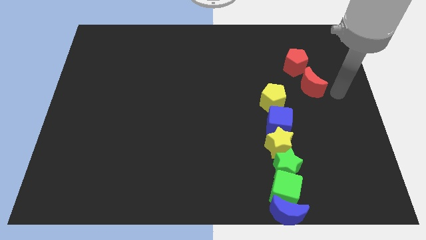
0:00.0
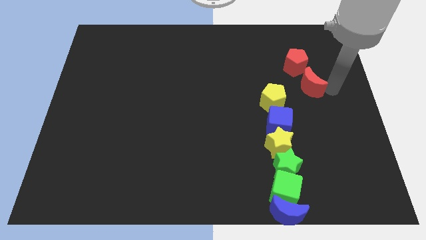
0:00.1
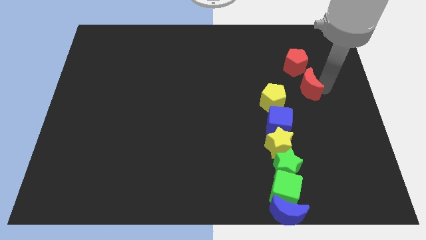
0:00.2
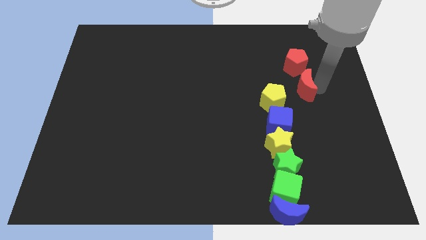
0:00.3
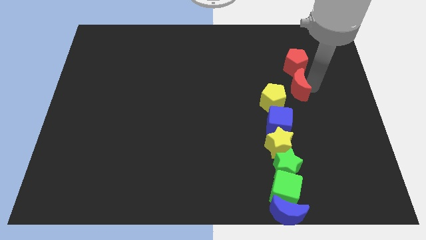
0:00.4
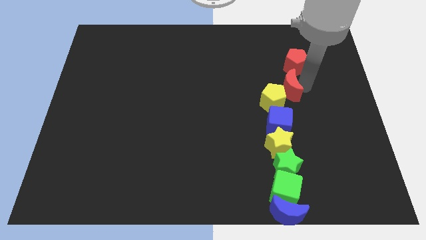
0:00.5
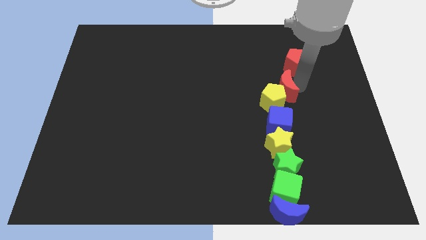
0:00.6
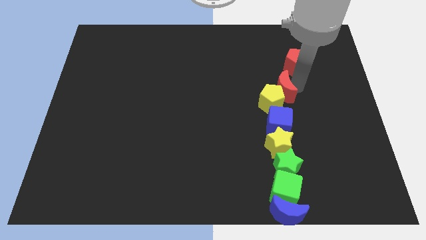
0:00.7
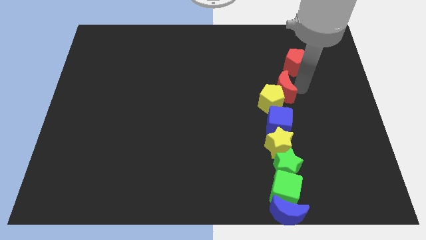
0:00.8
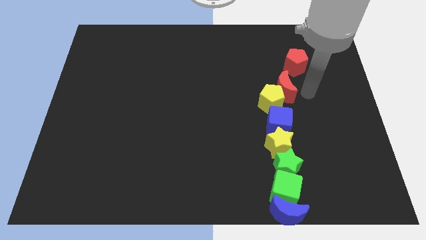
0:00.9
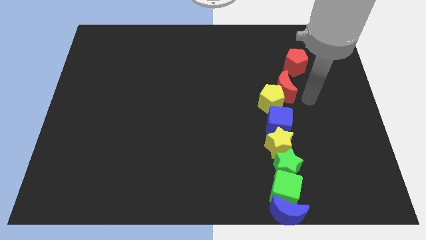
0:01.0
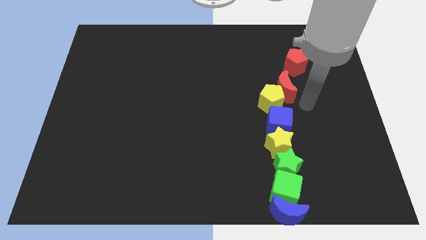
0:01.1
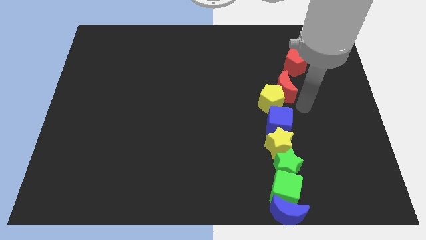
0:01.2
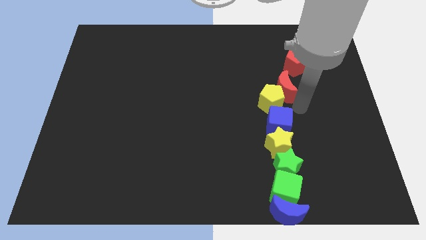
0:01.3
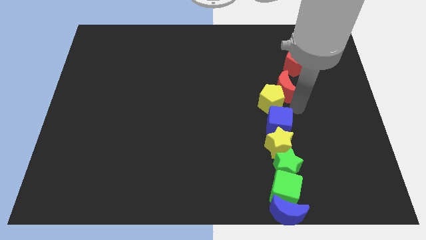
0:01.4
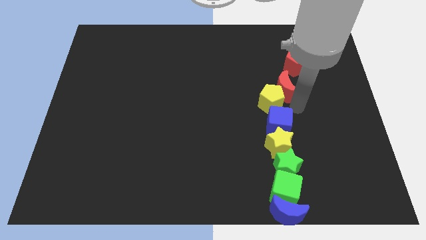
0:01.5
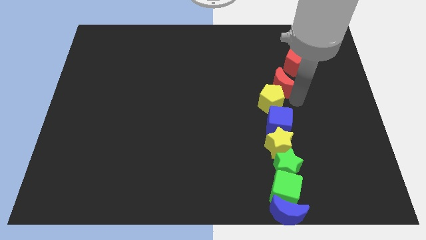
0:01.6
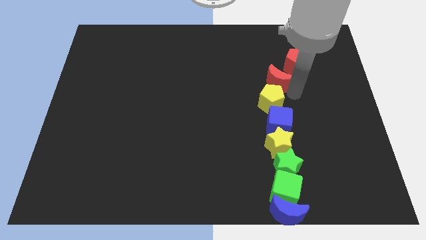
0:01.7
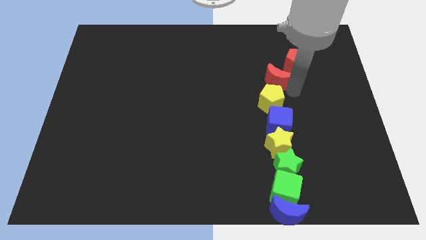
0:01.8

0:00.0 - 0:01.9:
place the red moon between the red pentagon and yellow pentagon

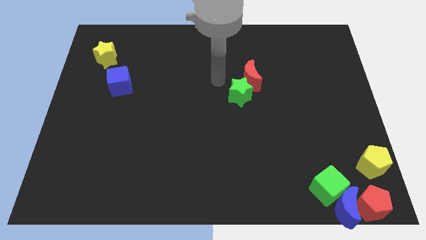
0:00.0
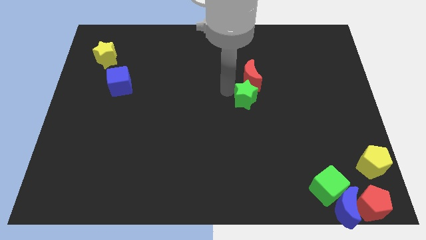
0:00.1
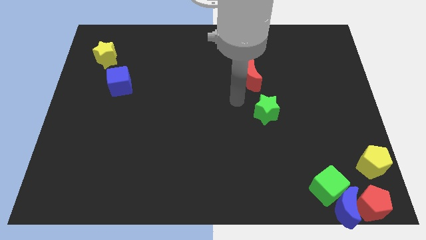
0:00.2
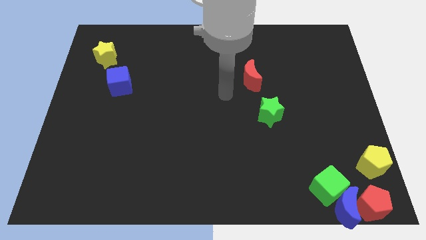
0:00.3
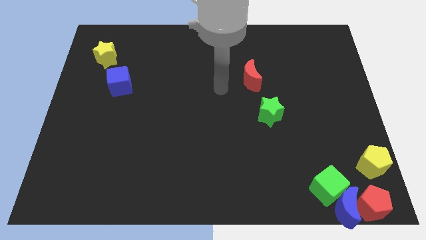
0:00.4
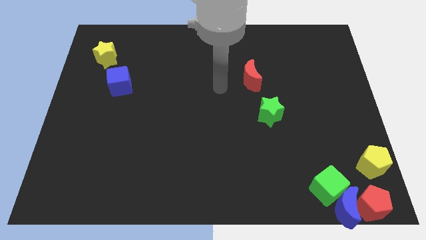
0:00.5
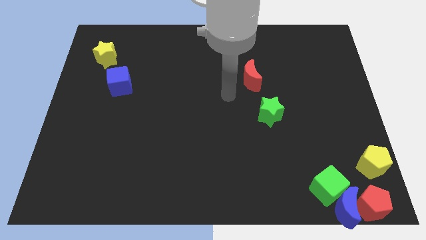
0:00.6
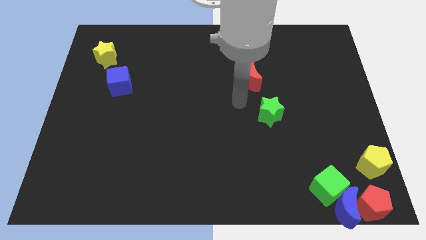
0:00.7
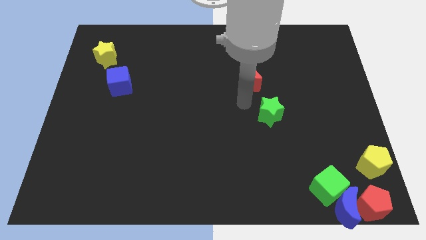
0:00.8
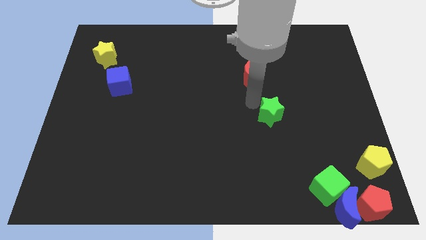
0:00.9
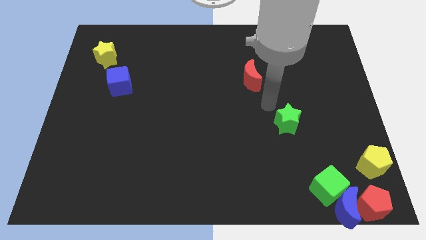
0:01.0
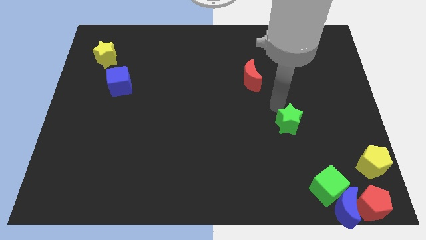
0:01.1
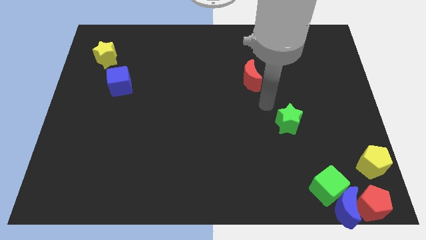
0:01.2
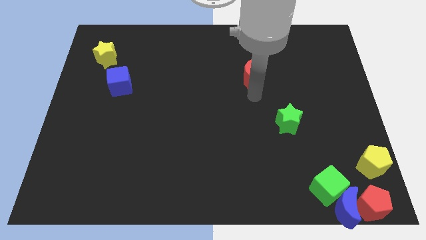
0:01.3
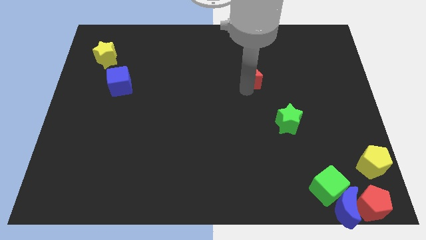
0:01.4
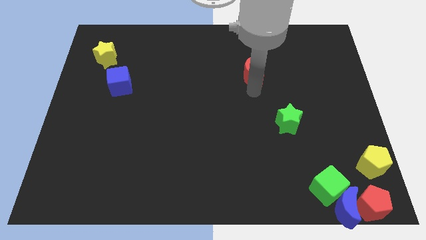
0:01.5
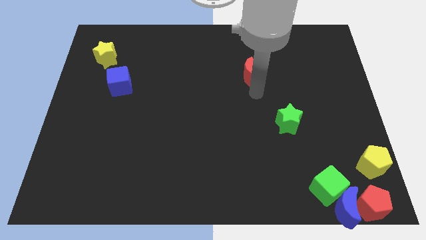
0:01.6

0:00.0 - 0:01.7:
separate the green star from red crescent

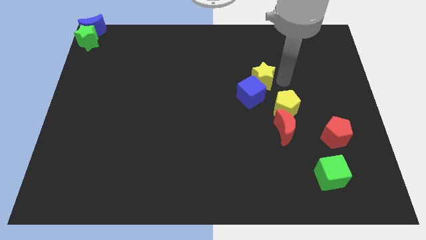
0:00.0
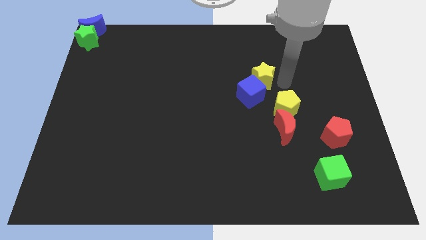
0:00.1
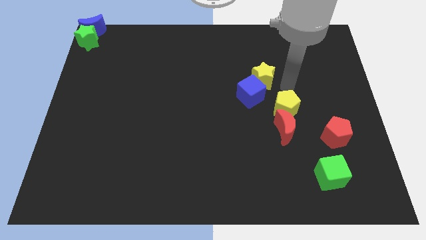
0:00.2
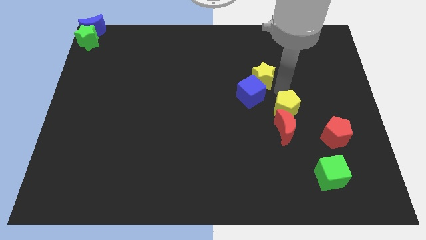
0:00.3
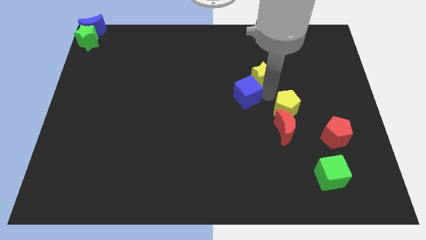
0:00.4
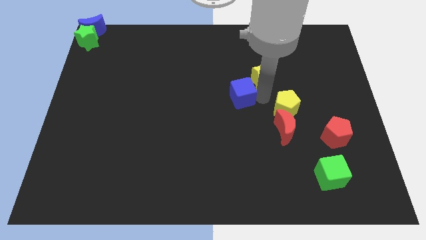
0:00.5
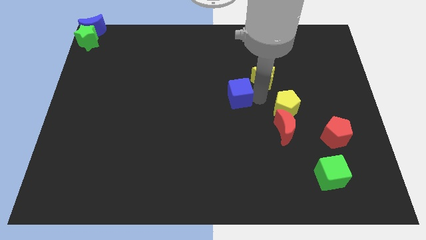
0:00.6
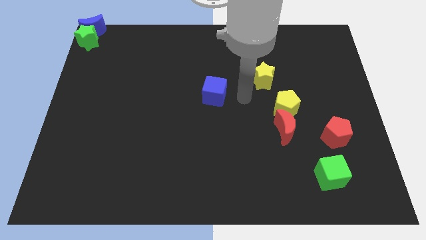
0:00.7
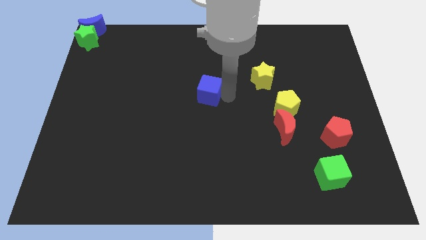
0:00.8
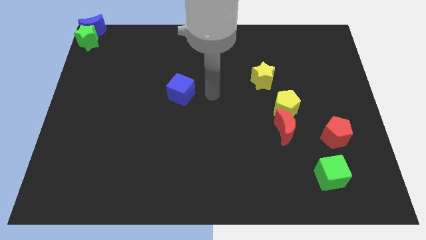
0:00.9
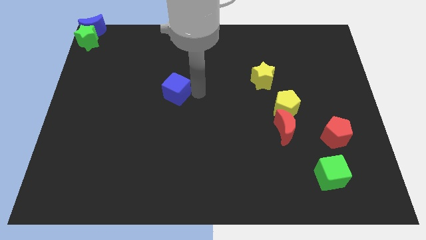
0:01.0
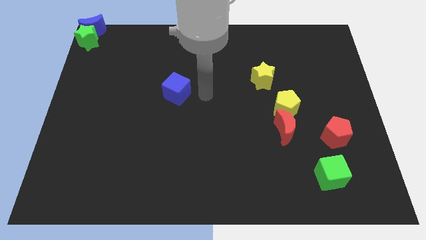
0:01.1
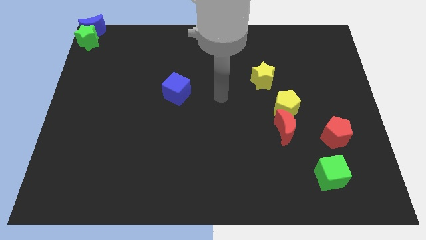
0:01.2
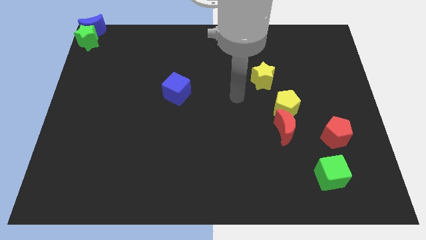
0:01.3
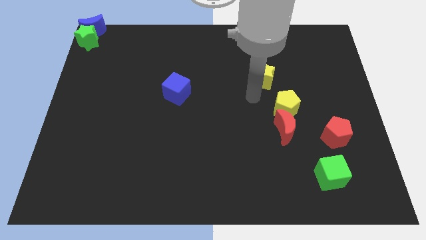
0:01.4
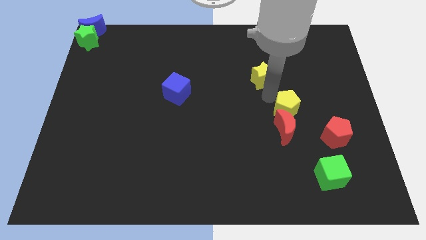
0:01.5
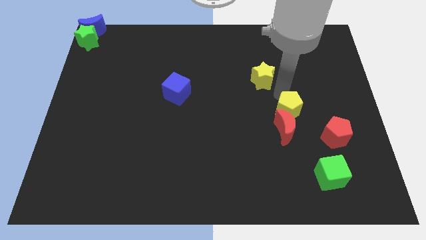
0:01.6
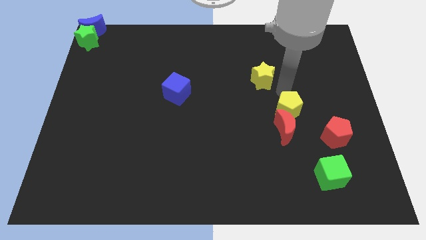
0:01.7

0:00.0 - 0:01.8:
separate the blue cube from the yellow star

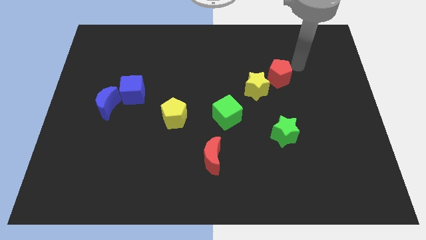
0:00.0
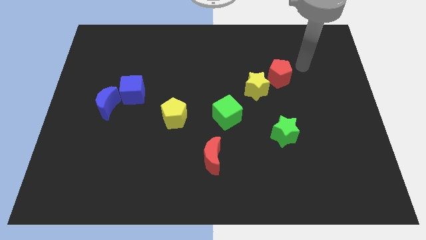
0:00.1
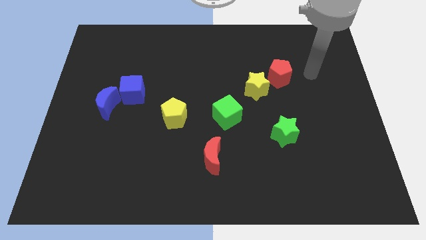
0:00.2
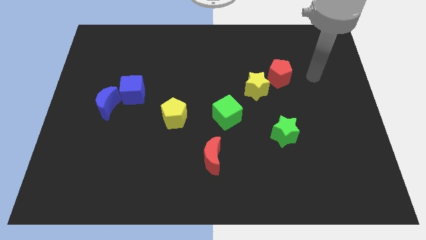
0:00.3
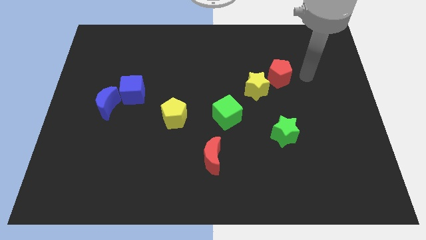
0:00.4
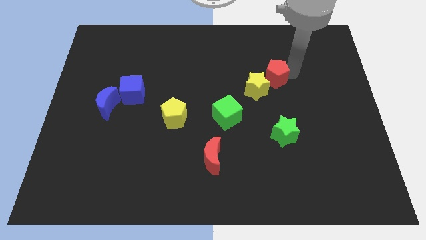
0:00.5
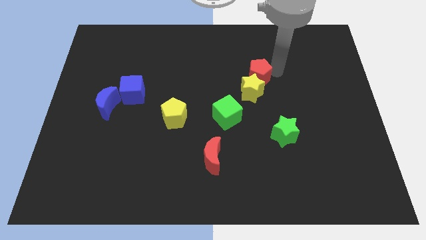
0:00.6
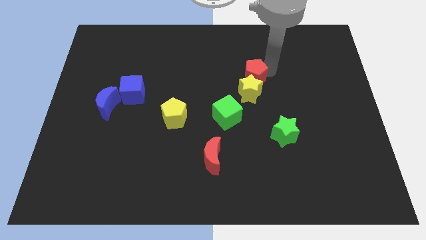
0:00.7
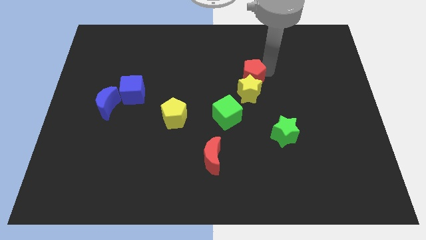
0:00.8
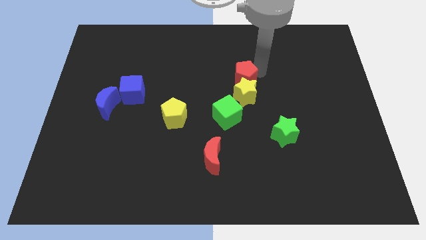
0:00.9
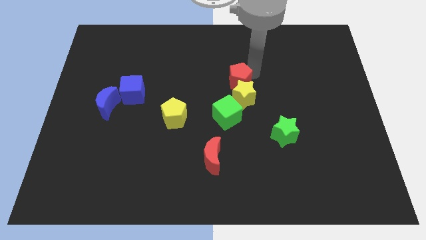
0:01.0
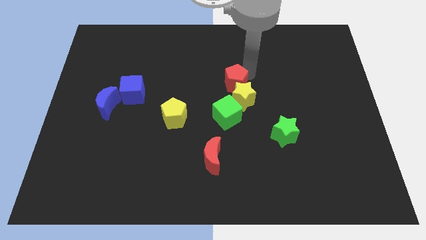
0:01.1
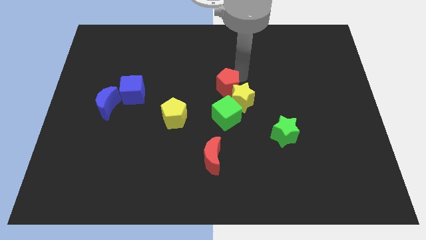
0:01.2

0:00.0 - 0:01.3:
push red pentagon in to yellow star

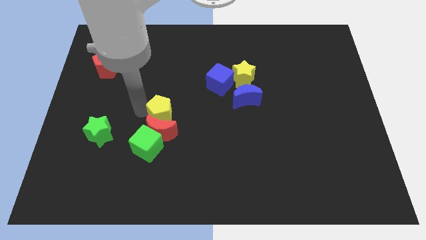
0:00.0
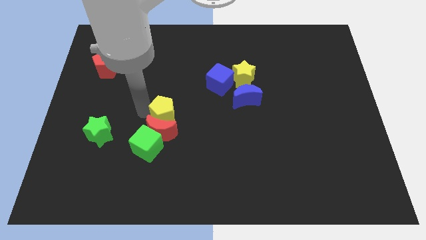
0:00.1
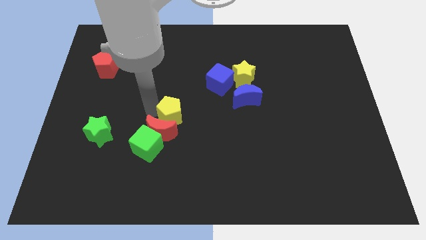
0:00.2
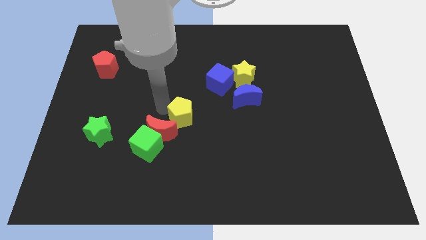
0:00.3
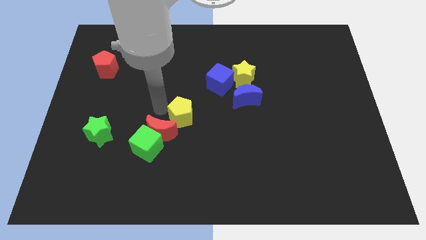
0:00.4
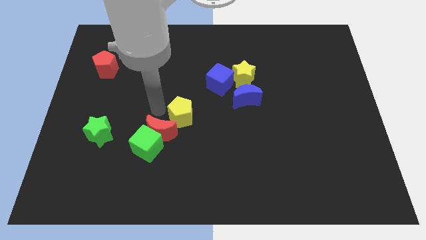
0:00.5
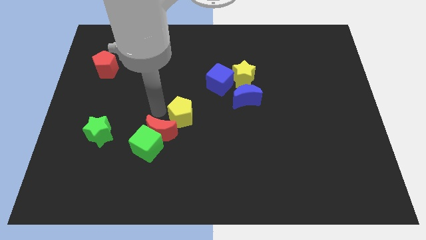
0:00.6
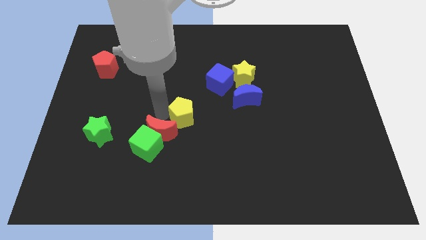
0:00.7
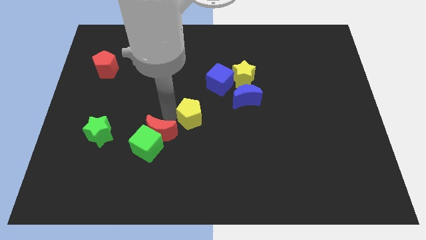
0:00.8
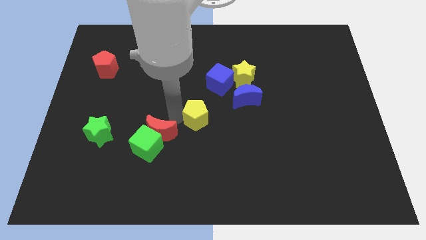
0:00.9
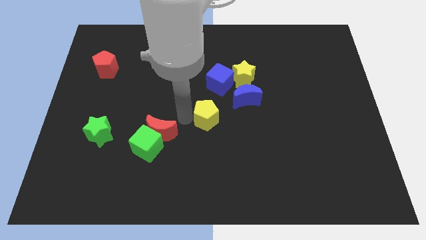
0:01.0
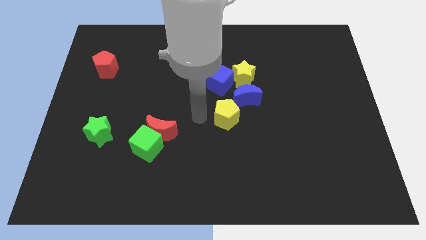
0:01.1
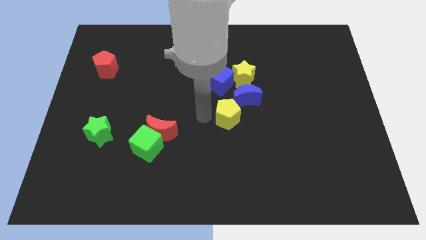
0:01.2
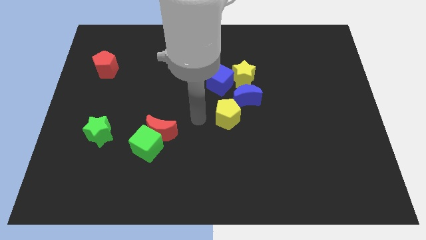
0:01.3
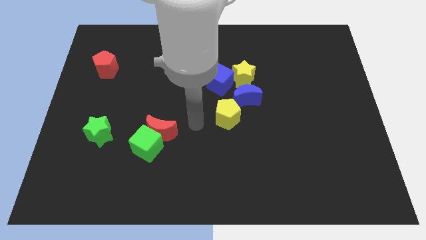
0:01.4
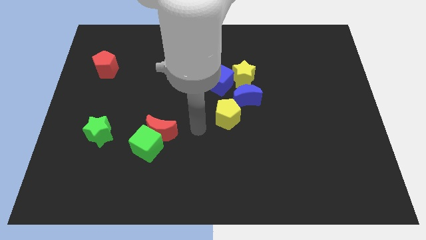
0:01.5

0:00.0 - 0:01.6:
separate the red moon and yellow pentagon

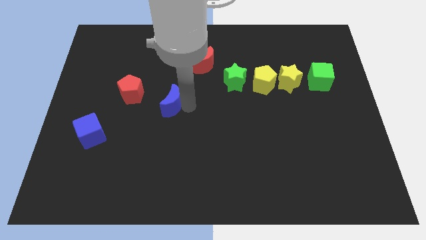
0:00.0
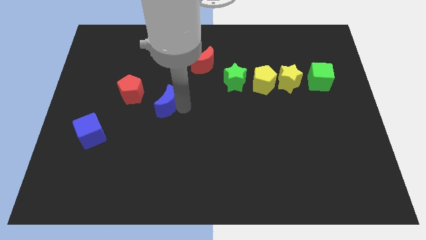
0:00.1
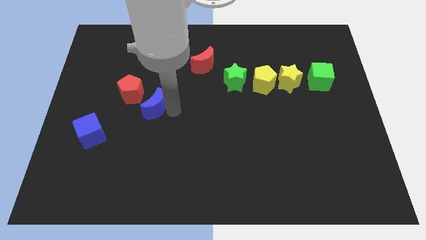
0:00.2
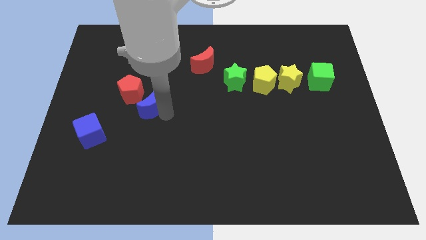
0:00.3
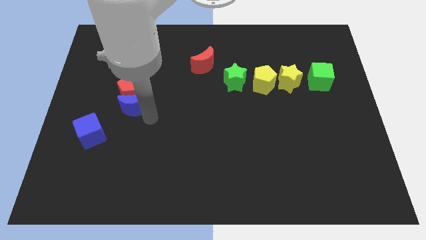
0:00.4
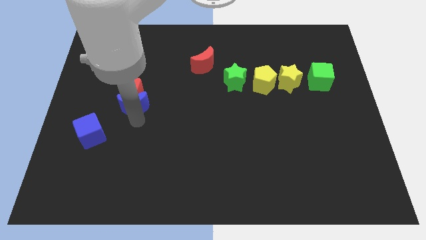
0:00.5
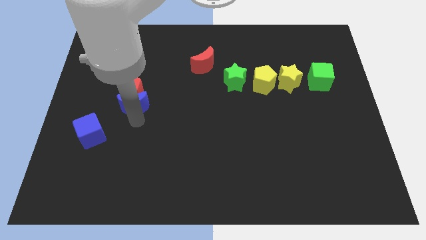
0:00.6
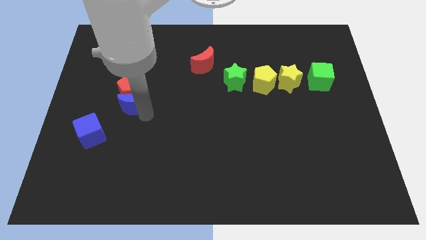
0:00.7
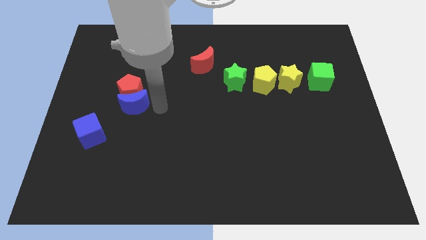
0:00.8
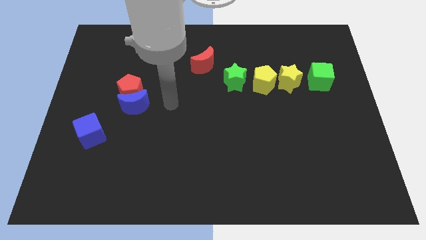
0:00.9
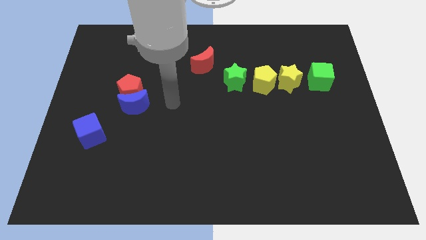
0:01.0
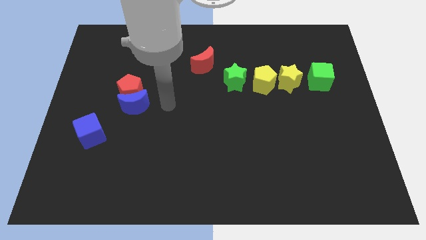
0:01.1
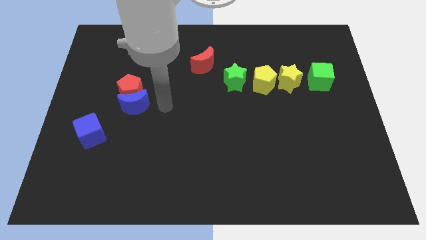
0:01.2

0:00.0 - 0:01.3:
place the blue crescent to the bottom side of the red pentagon
